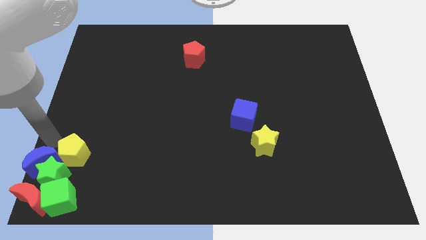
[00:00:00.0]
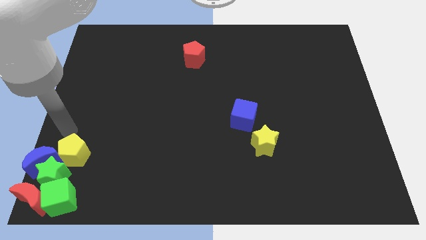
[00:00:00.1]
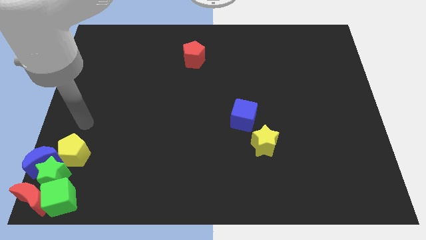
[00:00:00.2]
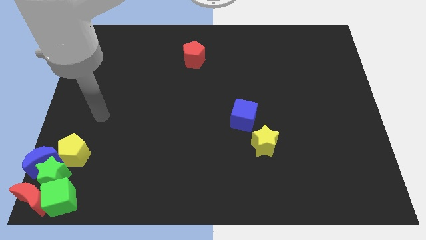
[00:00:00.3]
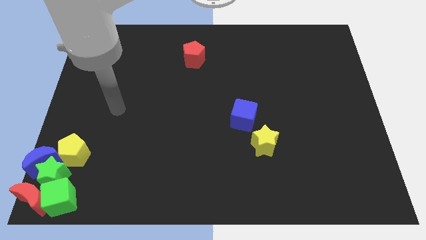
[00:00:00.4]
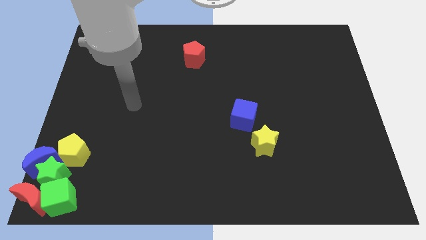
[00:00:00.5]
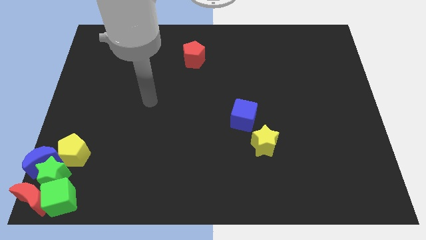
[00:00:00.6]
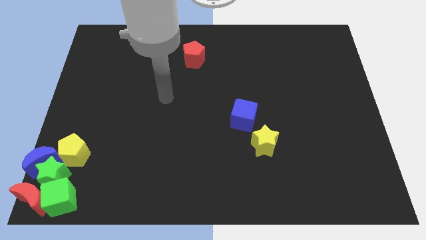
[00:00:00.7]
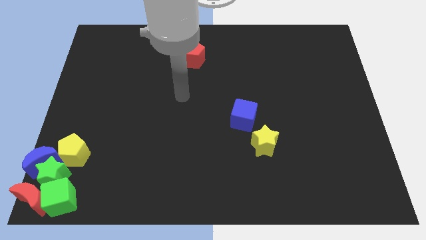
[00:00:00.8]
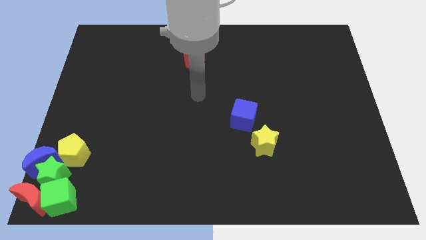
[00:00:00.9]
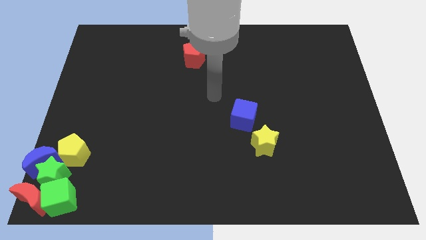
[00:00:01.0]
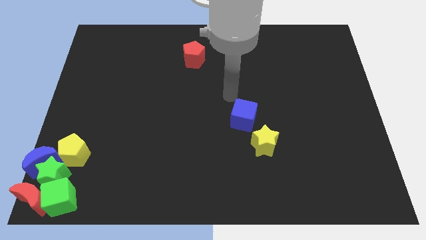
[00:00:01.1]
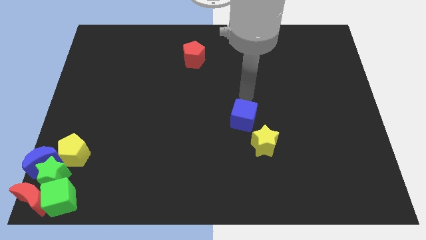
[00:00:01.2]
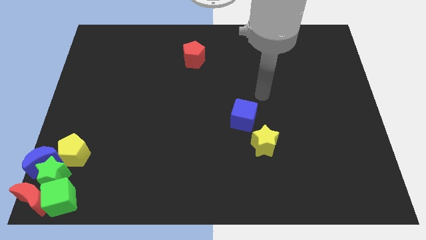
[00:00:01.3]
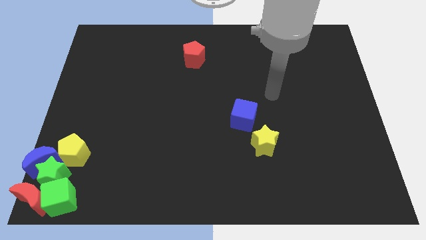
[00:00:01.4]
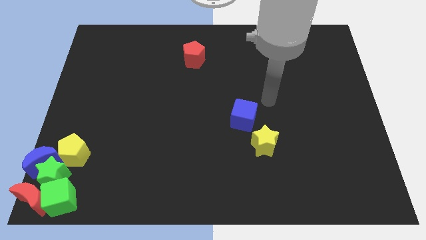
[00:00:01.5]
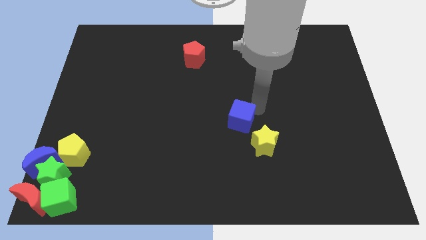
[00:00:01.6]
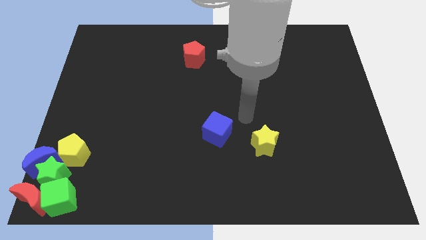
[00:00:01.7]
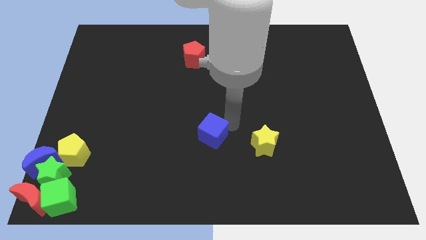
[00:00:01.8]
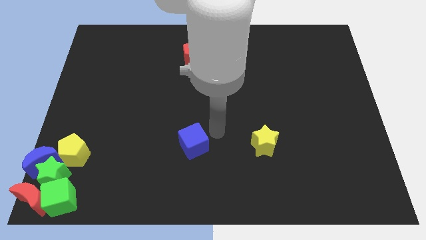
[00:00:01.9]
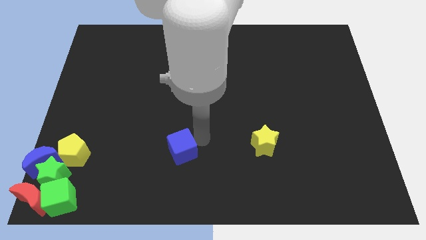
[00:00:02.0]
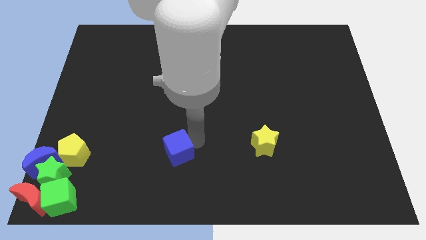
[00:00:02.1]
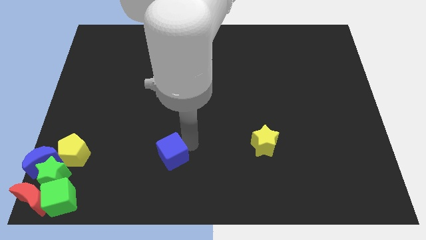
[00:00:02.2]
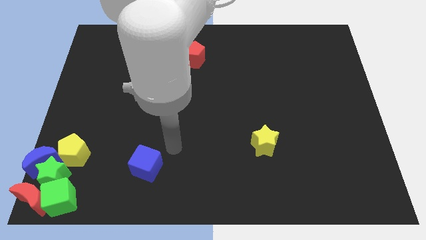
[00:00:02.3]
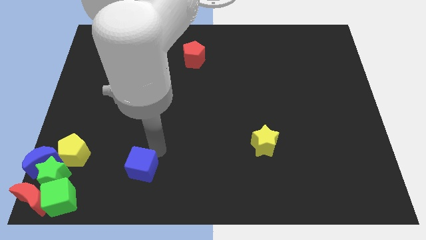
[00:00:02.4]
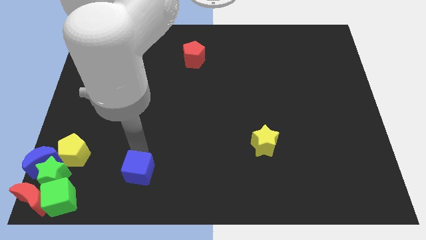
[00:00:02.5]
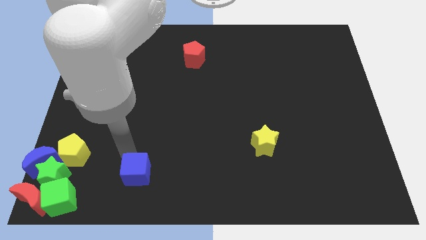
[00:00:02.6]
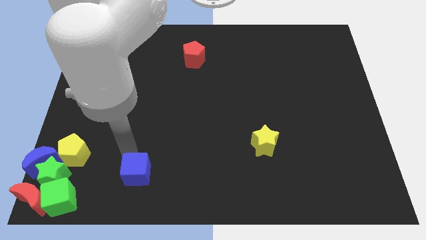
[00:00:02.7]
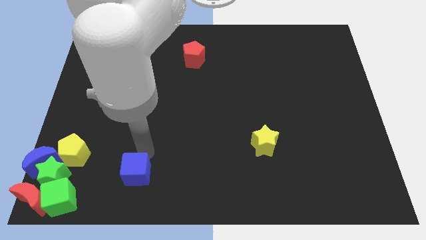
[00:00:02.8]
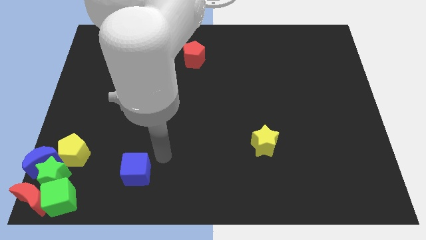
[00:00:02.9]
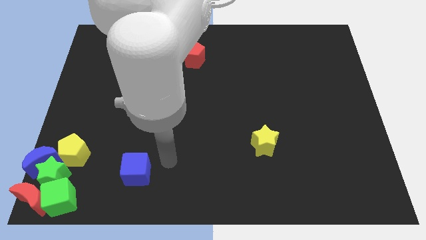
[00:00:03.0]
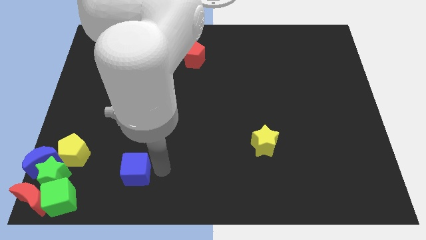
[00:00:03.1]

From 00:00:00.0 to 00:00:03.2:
place the blue cube diagonal to the yellow pentagon

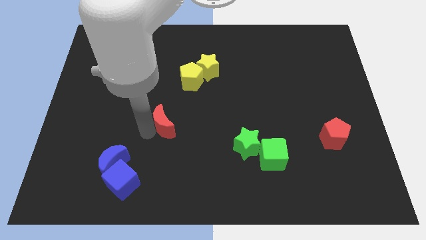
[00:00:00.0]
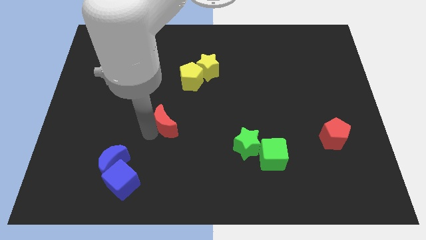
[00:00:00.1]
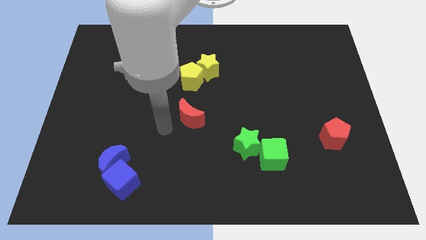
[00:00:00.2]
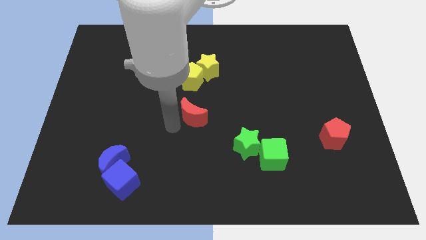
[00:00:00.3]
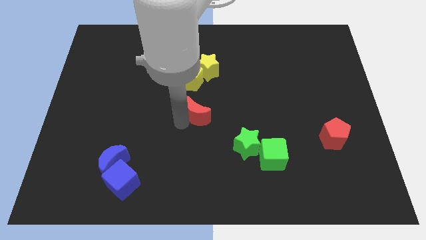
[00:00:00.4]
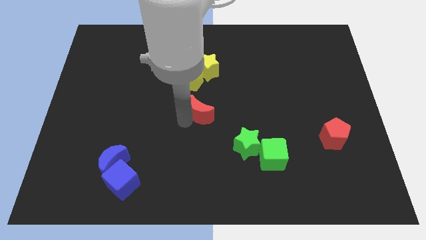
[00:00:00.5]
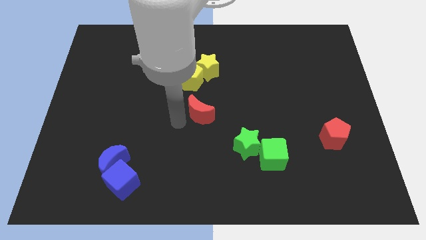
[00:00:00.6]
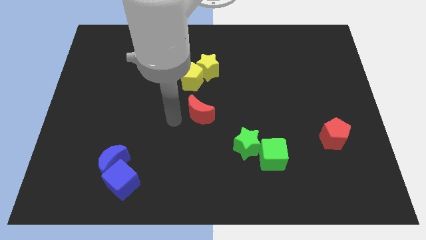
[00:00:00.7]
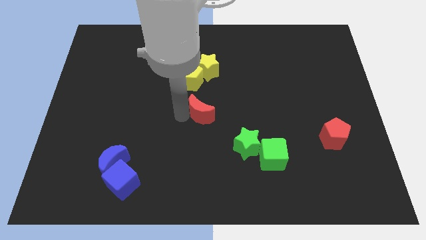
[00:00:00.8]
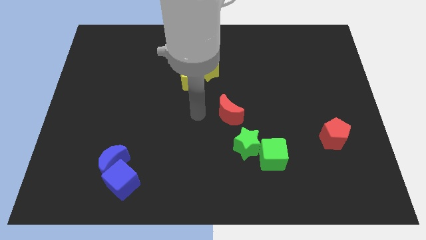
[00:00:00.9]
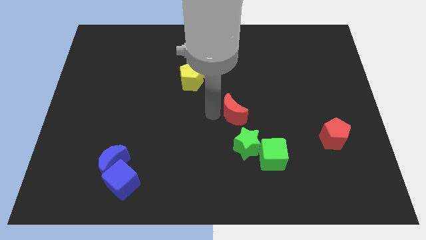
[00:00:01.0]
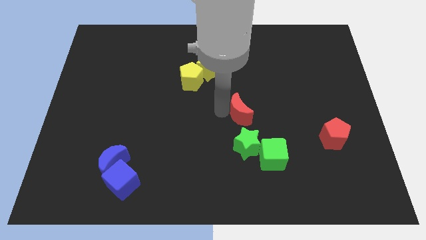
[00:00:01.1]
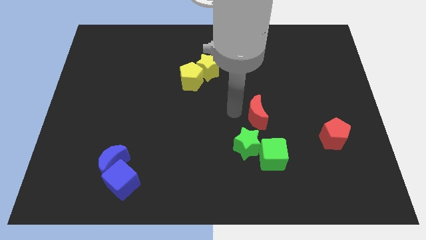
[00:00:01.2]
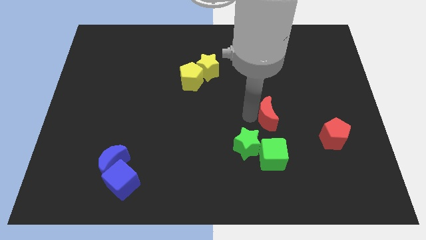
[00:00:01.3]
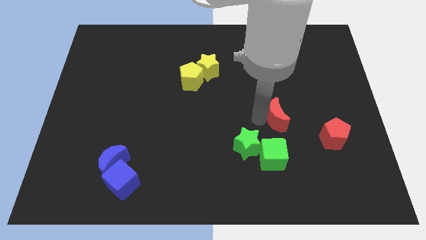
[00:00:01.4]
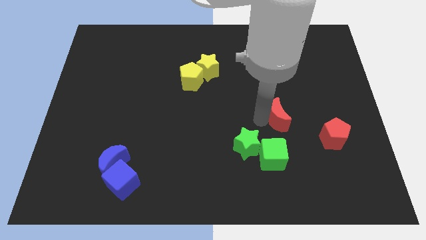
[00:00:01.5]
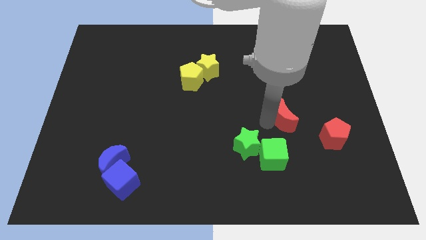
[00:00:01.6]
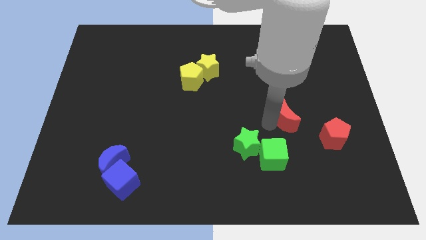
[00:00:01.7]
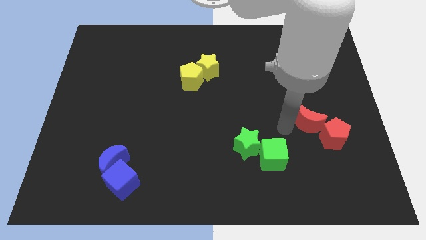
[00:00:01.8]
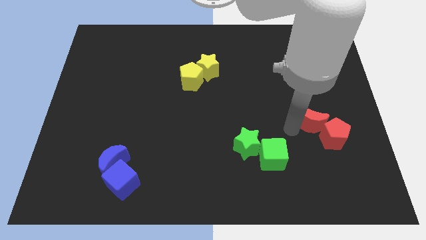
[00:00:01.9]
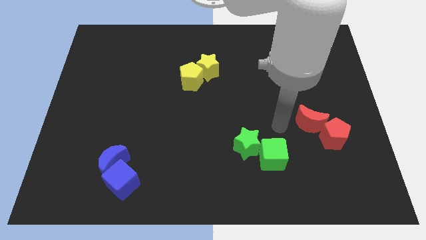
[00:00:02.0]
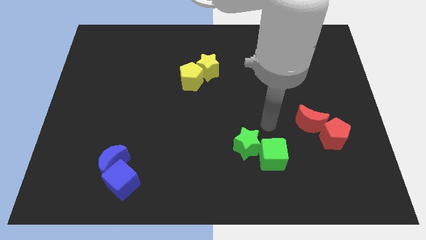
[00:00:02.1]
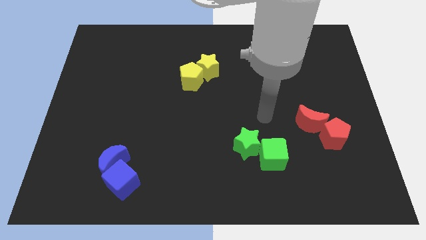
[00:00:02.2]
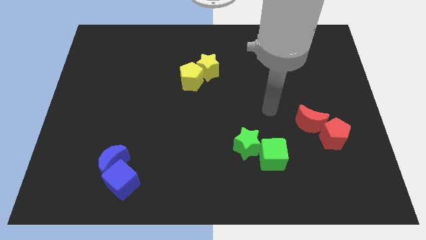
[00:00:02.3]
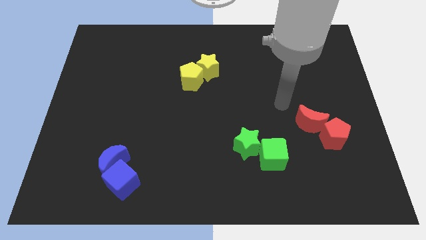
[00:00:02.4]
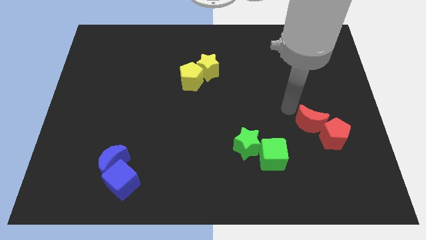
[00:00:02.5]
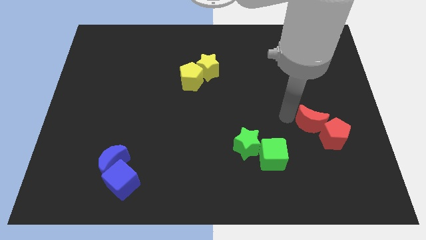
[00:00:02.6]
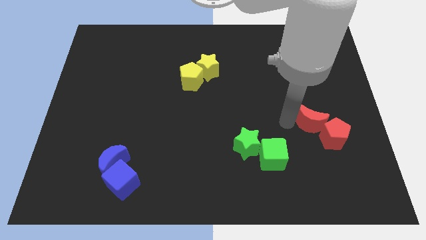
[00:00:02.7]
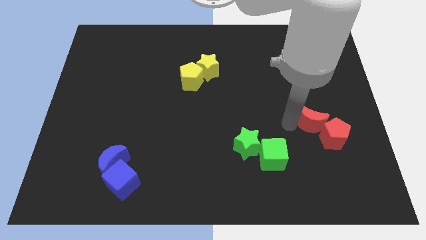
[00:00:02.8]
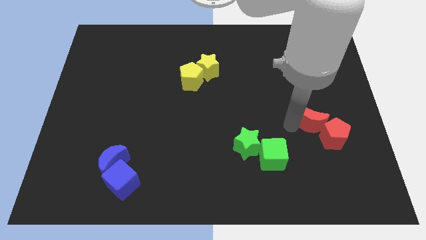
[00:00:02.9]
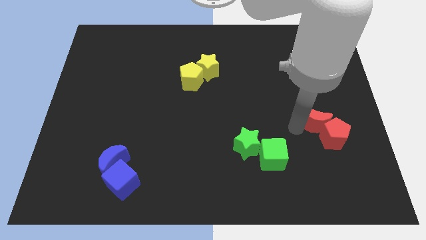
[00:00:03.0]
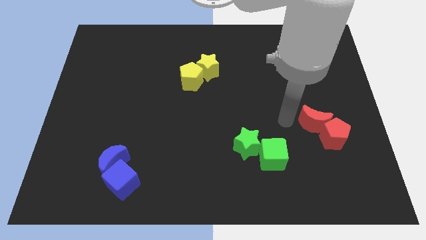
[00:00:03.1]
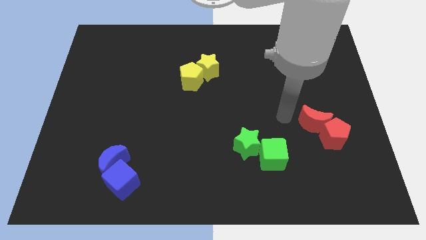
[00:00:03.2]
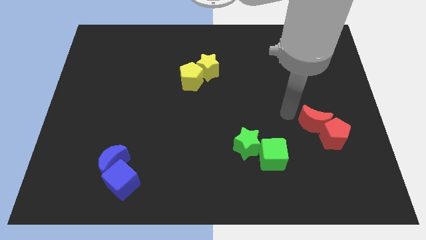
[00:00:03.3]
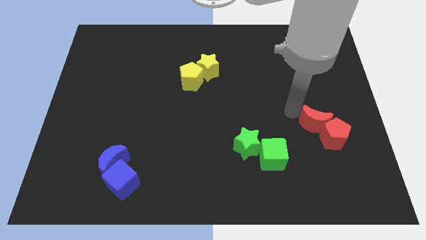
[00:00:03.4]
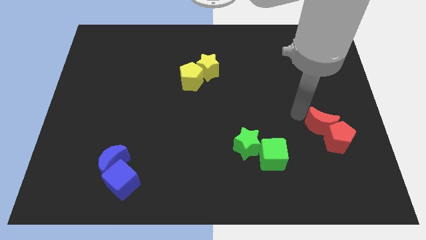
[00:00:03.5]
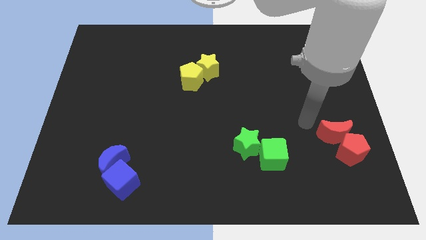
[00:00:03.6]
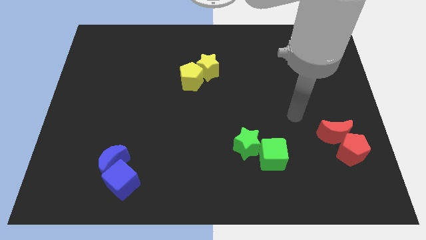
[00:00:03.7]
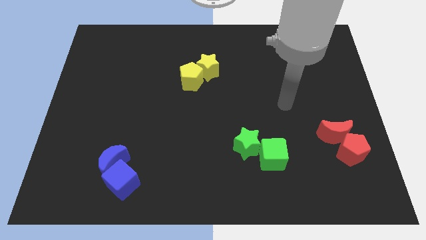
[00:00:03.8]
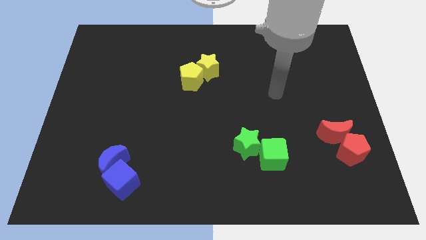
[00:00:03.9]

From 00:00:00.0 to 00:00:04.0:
move the red moon to the top left side of the red pentagon

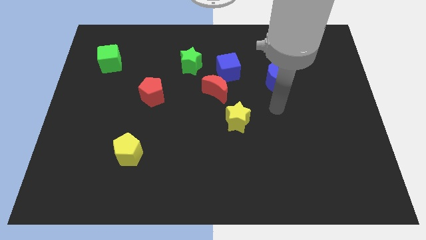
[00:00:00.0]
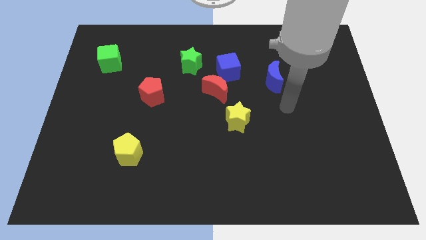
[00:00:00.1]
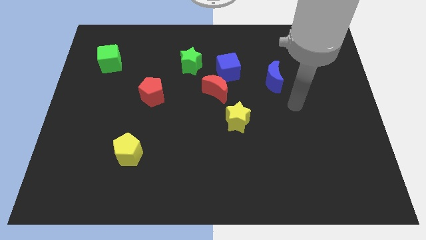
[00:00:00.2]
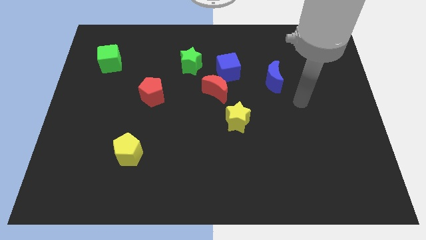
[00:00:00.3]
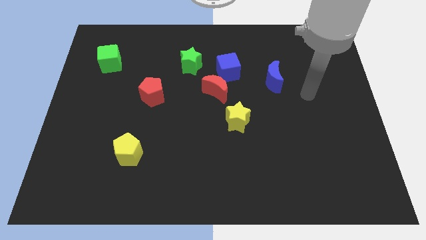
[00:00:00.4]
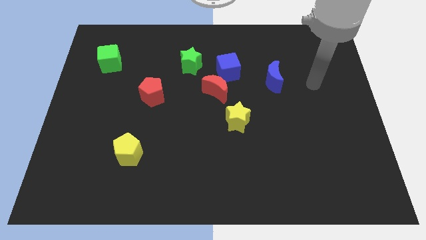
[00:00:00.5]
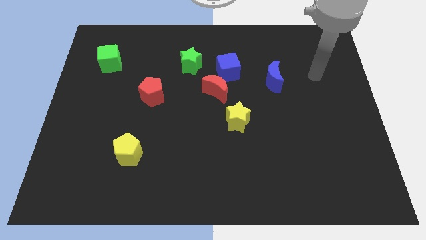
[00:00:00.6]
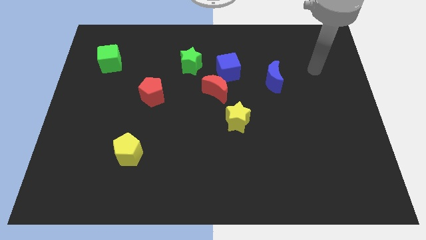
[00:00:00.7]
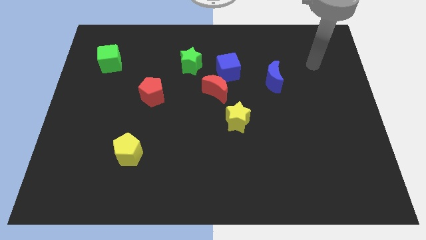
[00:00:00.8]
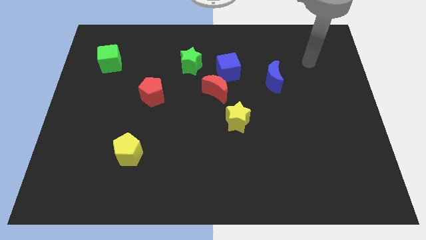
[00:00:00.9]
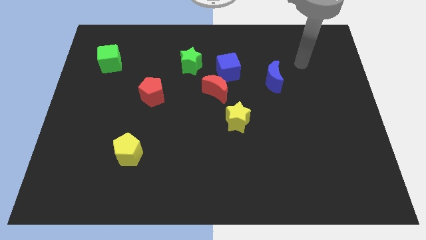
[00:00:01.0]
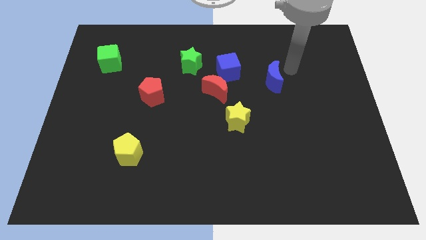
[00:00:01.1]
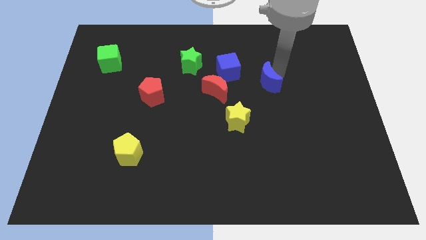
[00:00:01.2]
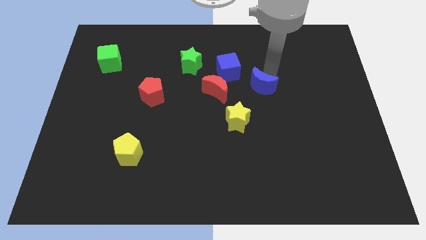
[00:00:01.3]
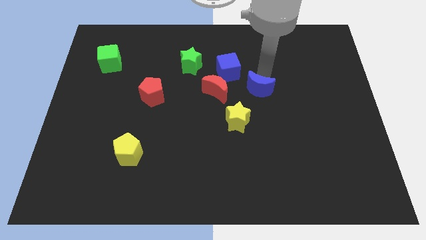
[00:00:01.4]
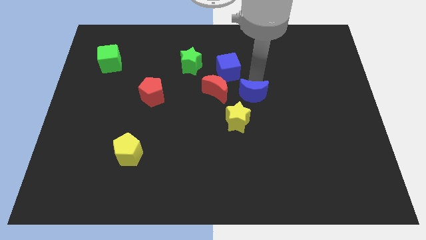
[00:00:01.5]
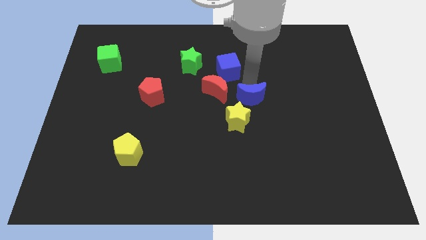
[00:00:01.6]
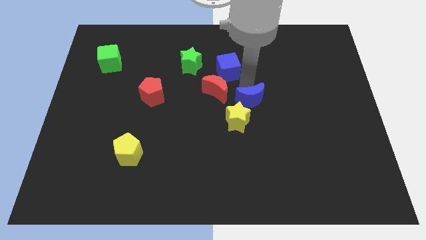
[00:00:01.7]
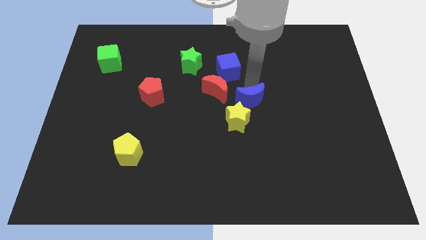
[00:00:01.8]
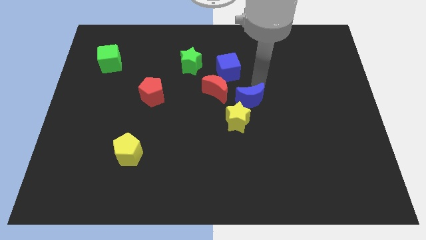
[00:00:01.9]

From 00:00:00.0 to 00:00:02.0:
place the blue crescent above the yellow star
